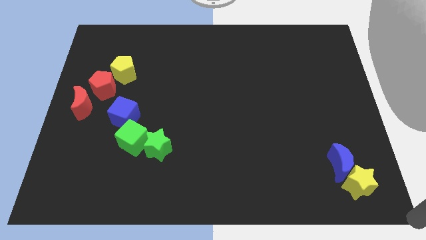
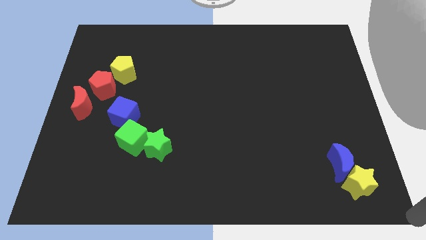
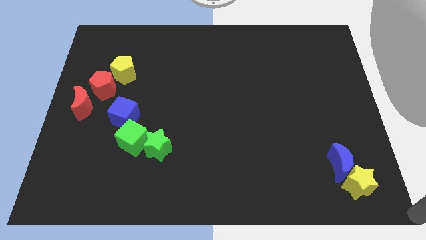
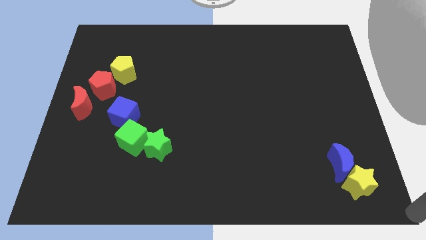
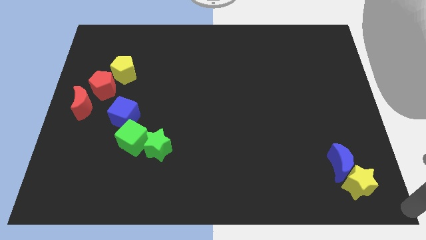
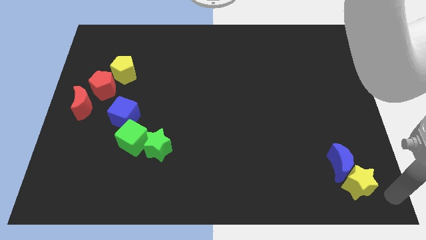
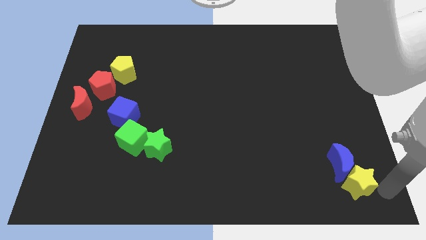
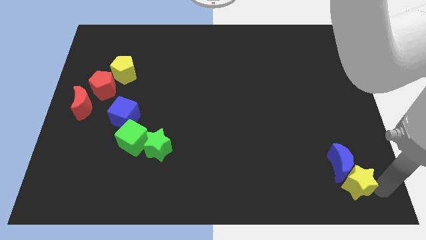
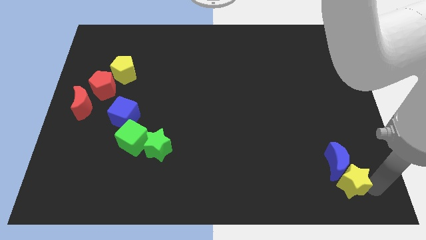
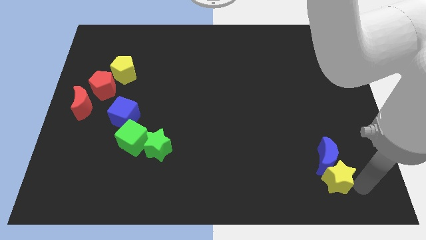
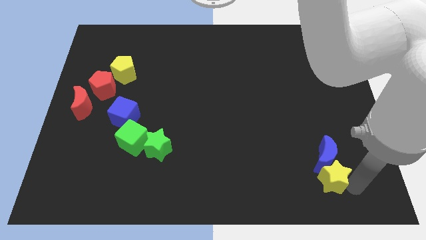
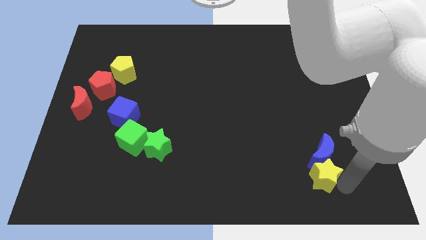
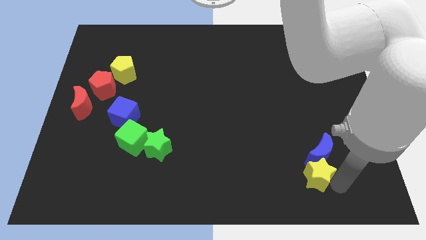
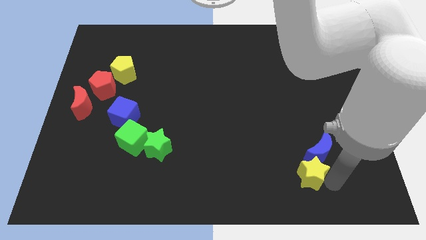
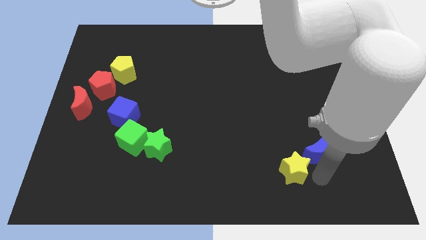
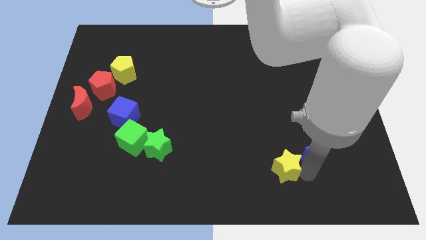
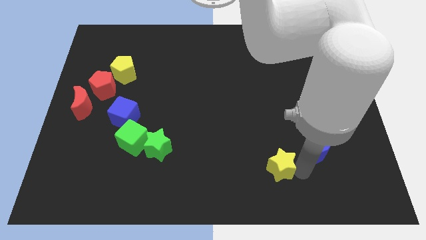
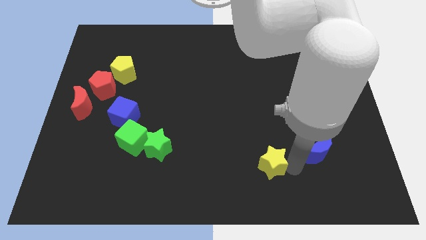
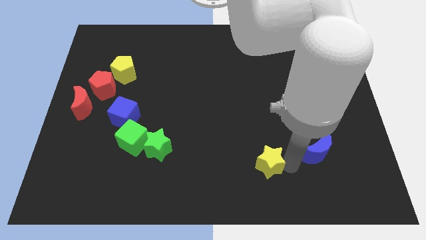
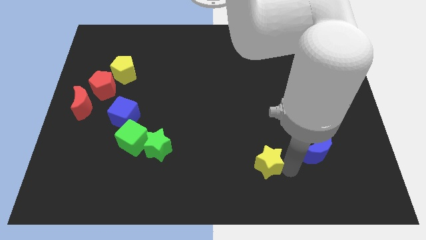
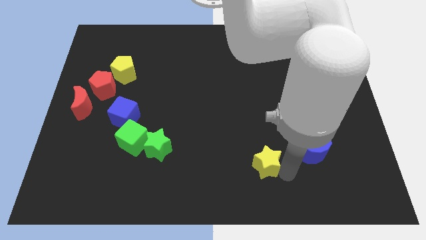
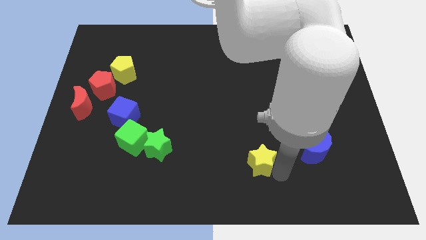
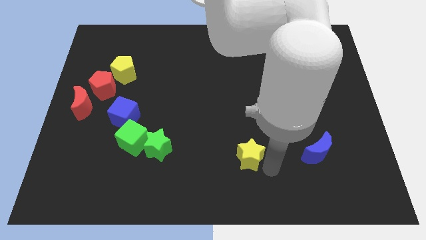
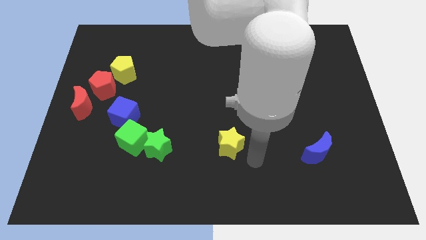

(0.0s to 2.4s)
place the yellow star in between the green star and blue moon

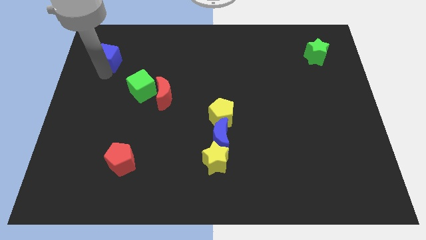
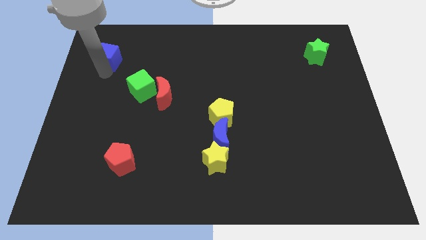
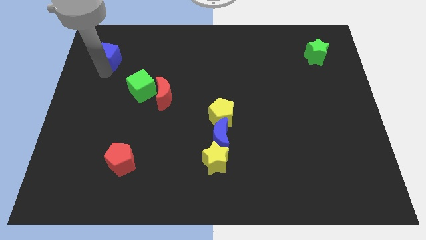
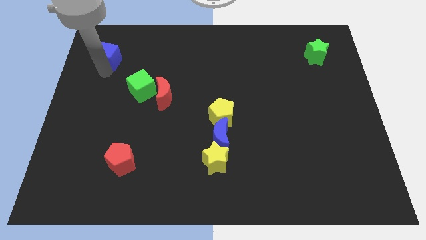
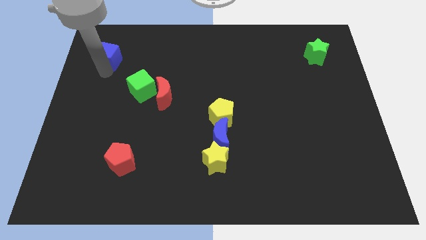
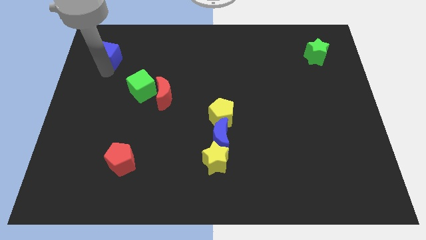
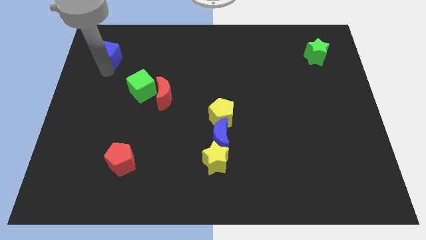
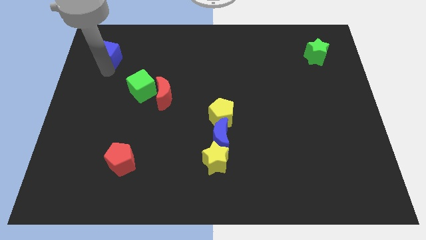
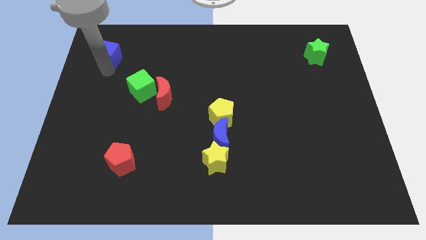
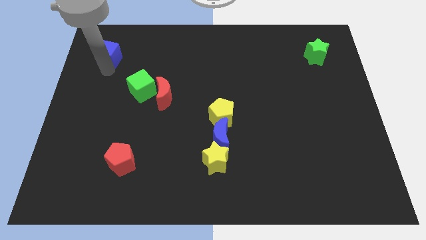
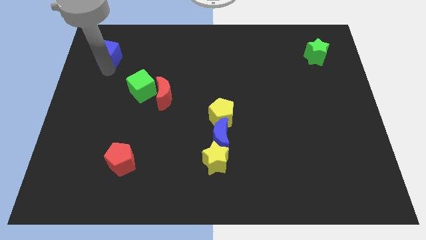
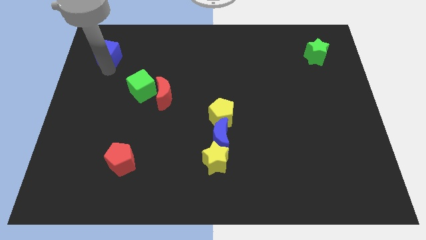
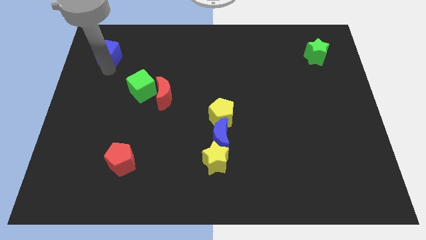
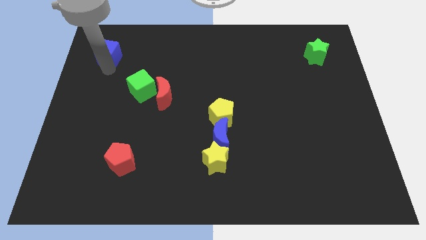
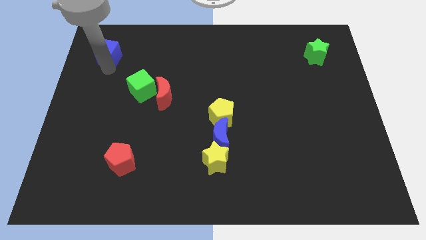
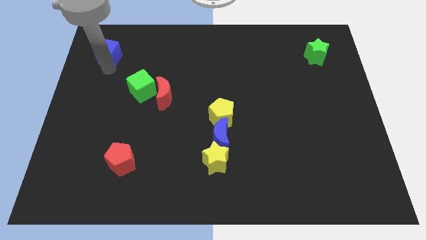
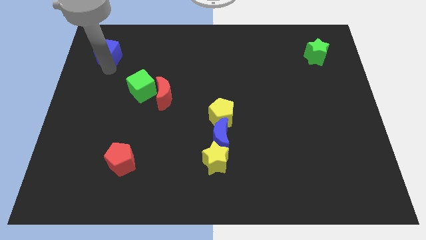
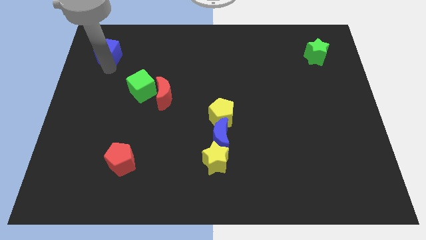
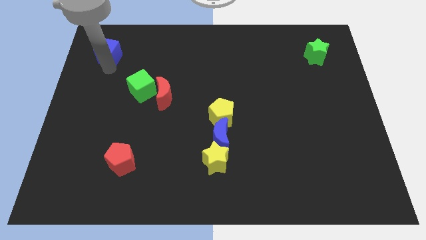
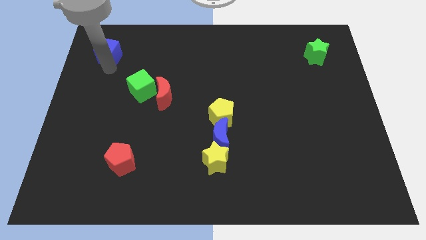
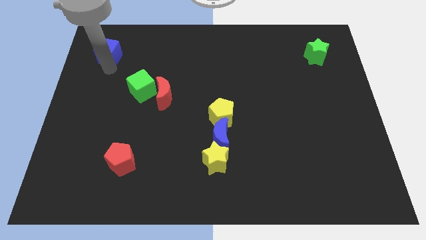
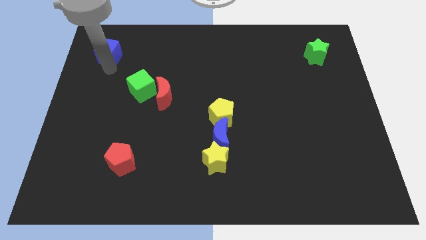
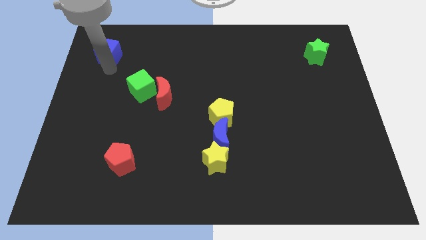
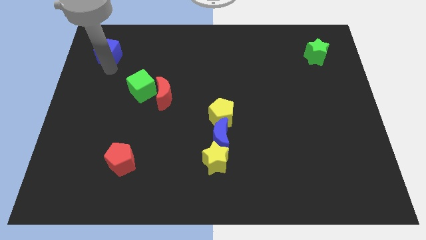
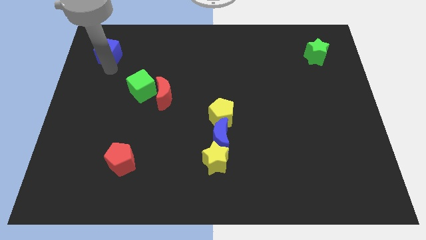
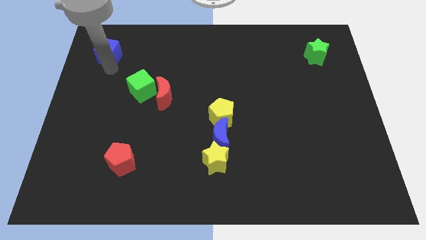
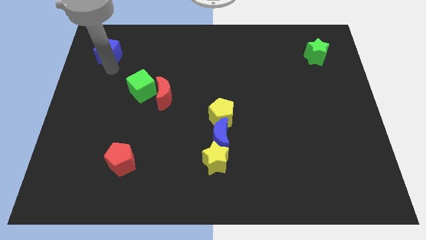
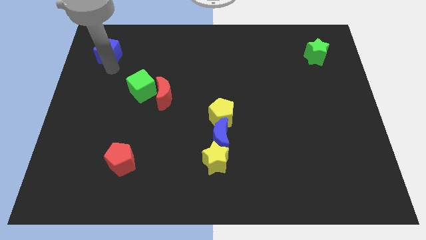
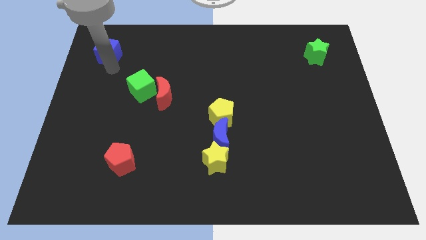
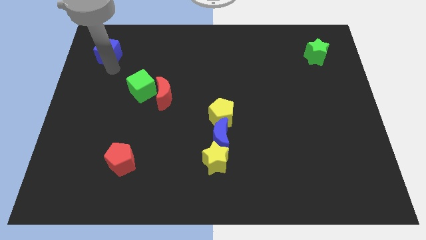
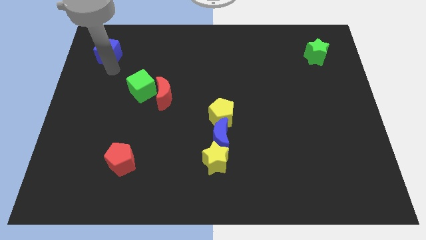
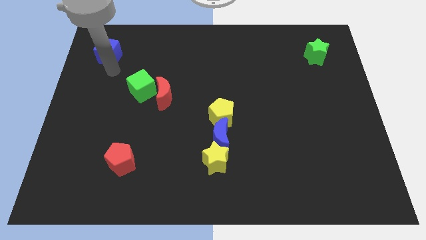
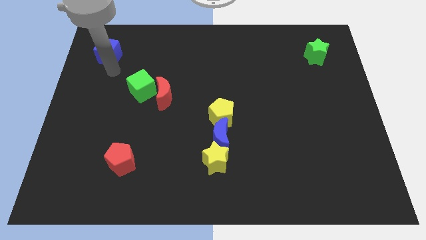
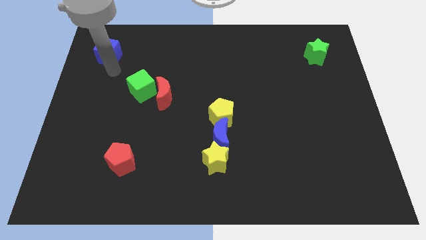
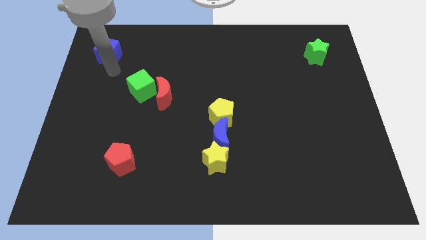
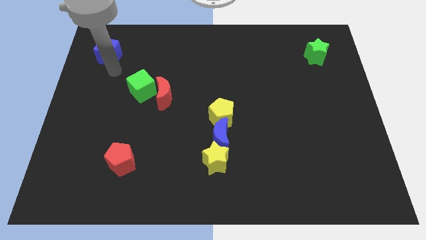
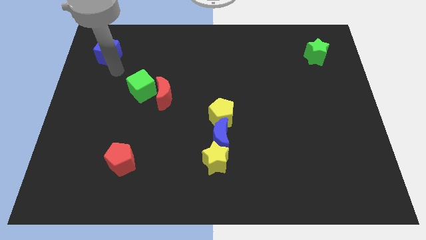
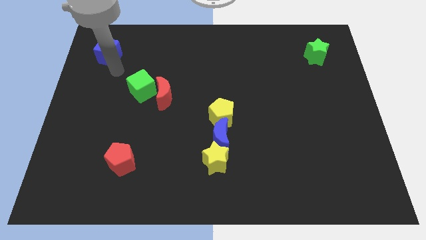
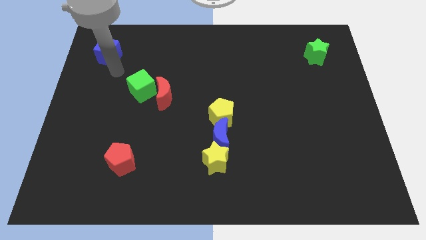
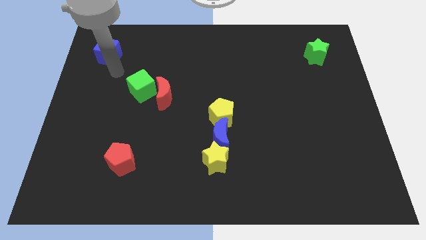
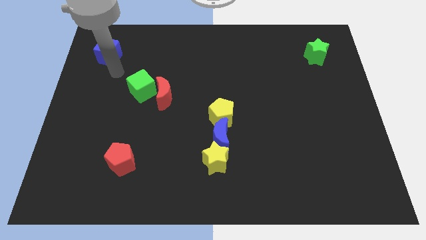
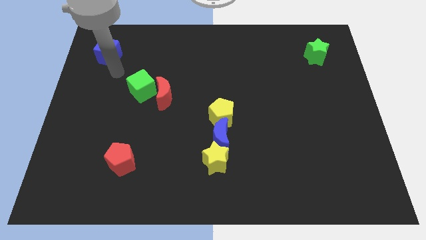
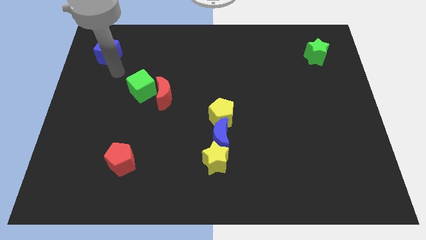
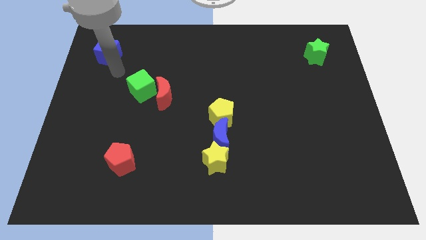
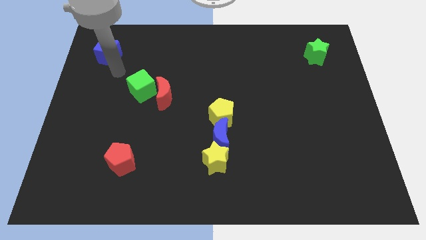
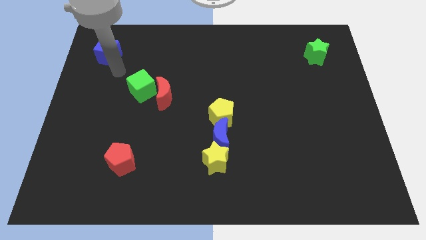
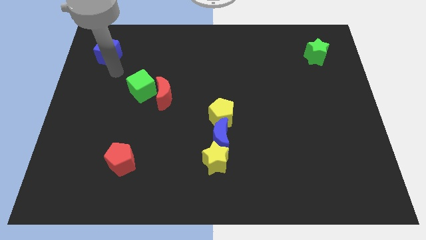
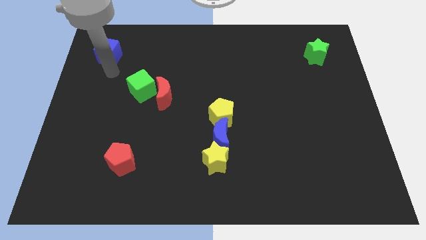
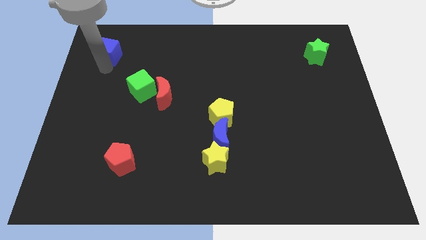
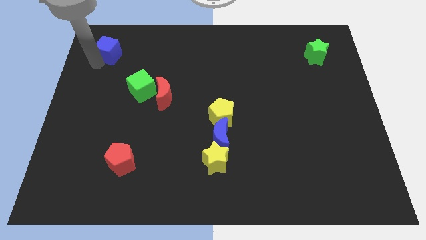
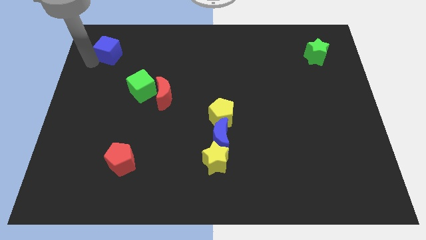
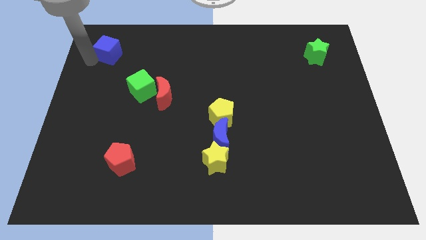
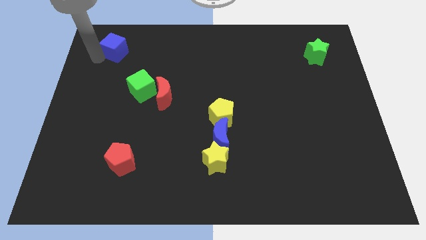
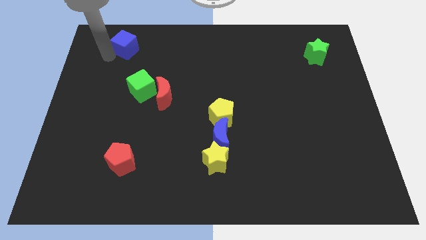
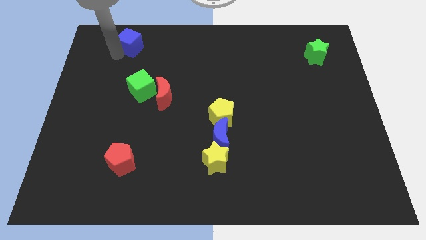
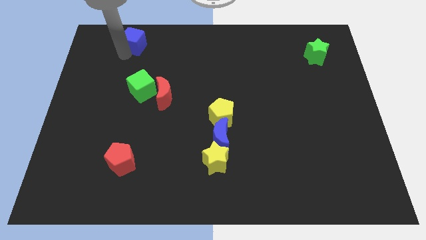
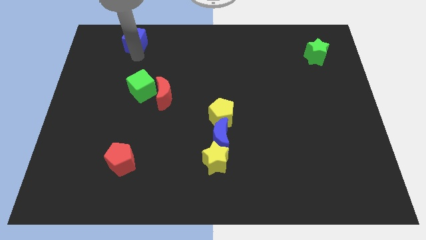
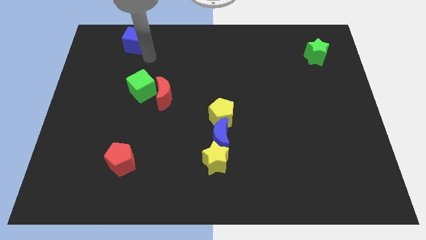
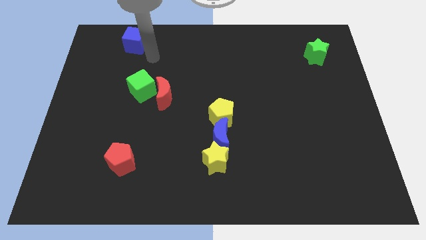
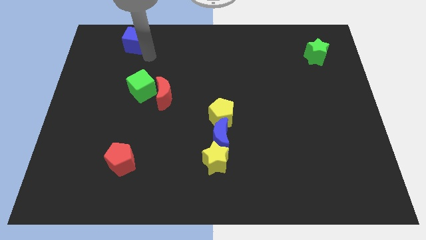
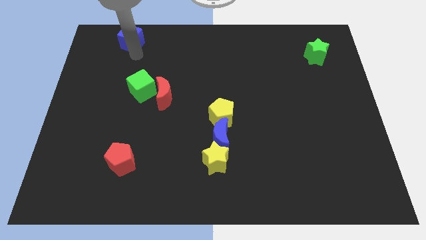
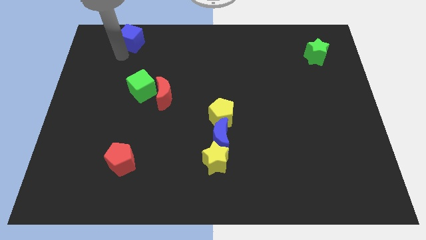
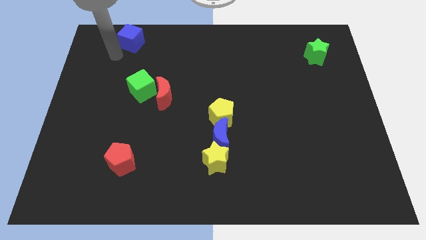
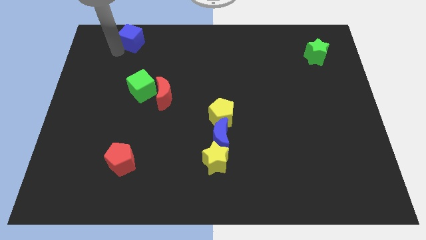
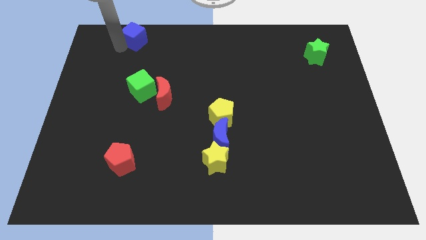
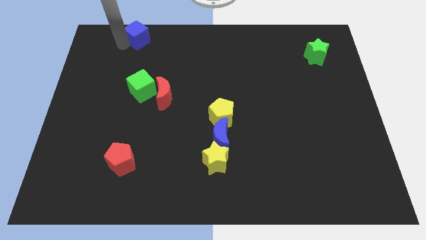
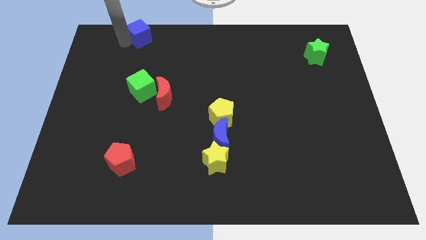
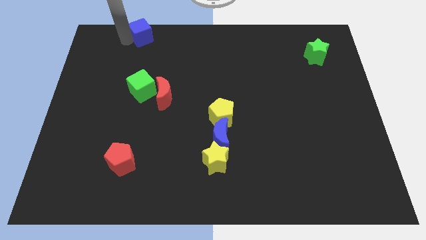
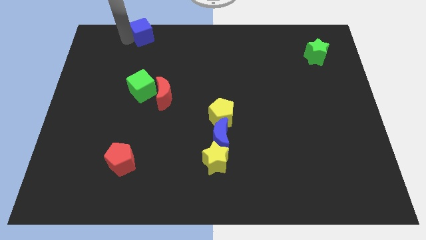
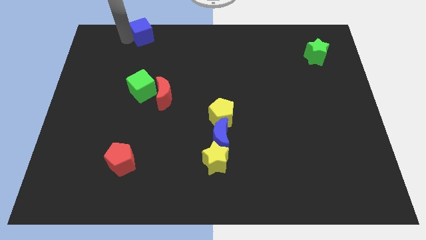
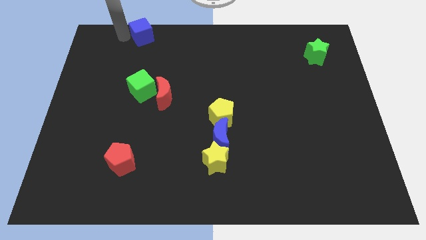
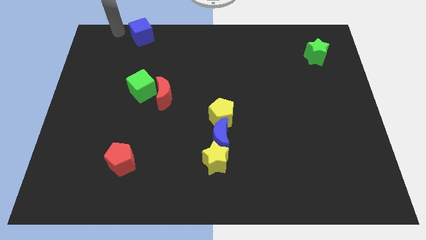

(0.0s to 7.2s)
move the blue cube to the vertical top side of the green cube
